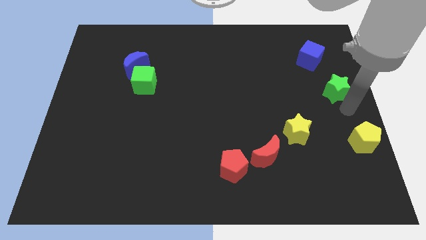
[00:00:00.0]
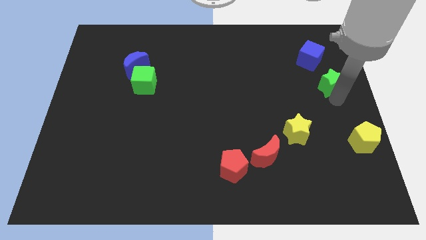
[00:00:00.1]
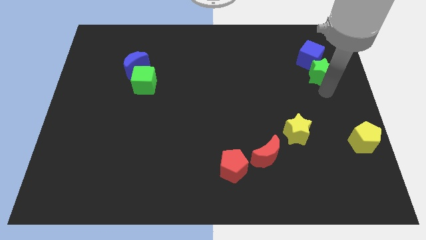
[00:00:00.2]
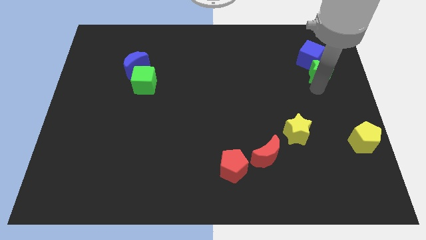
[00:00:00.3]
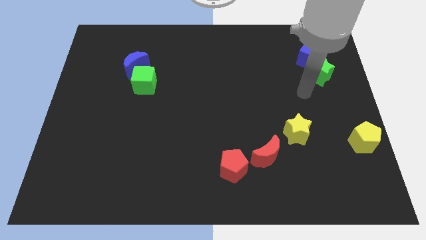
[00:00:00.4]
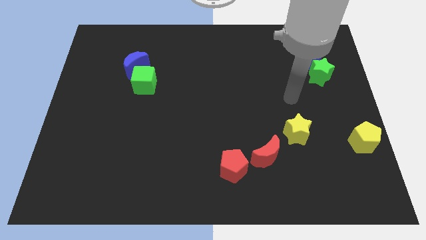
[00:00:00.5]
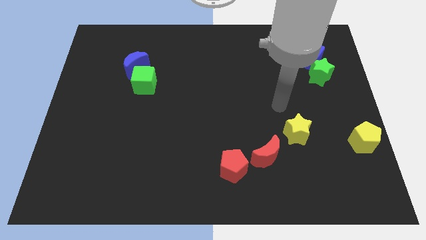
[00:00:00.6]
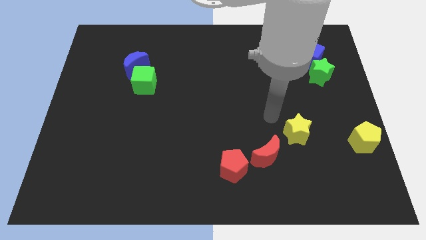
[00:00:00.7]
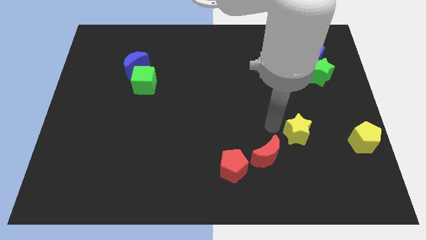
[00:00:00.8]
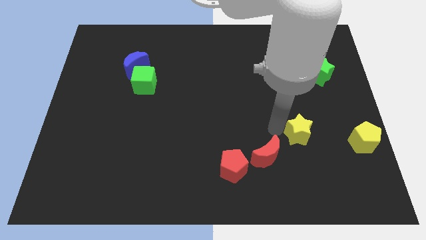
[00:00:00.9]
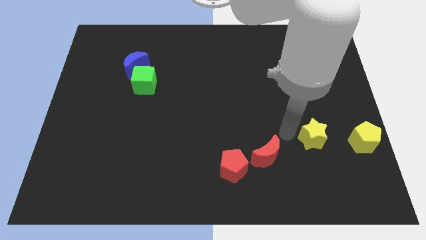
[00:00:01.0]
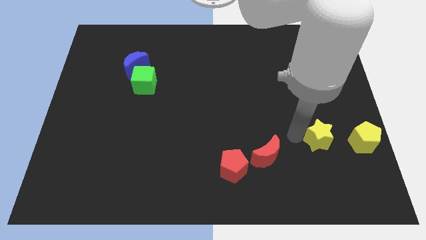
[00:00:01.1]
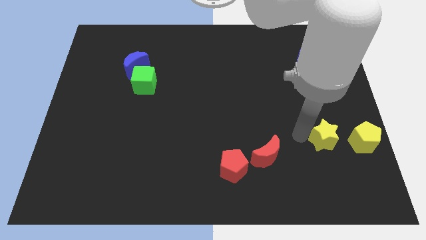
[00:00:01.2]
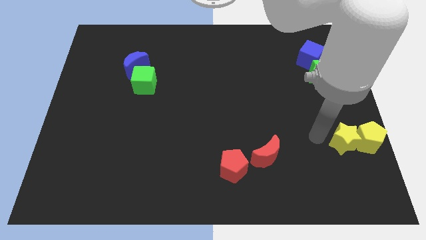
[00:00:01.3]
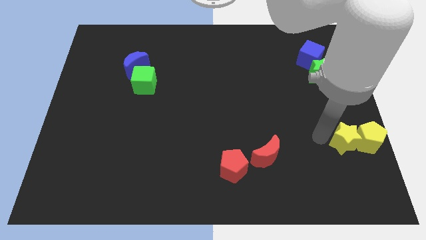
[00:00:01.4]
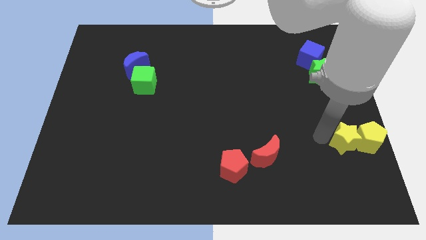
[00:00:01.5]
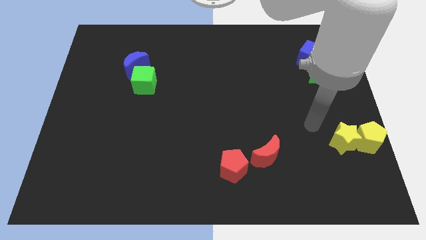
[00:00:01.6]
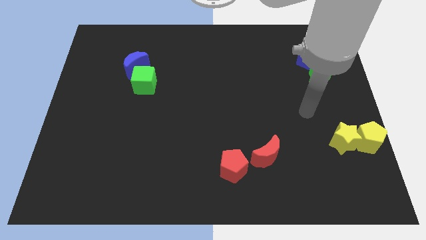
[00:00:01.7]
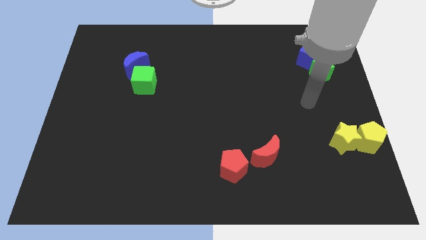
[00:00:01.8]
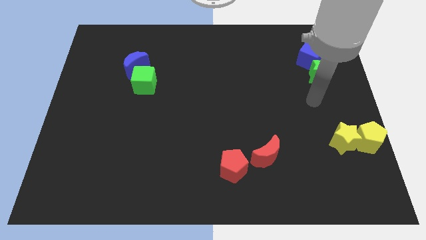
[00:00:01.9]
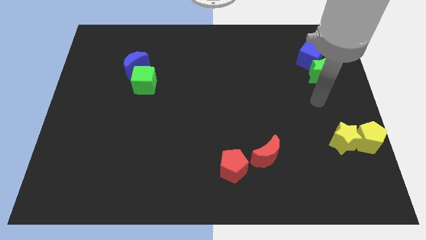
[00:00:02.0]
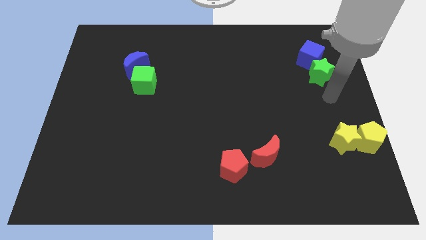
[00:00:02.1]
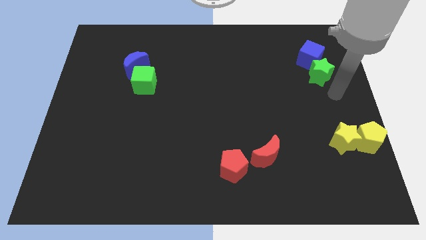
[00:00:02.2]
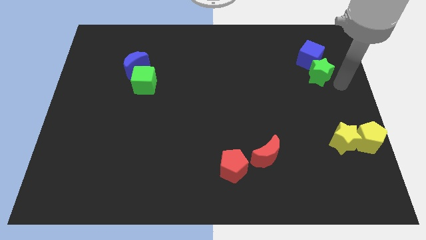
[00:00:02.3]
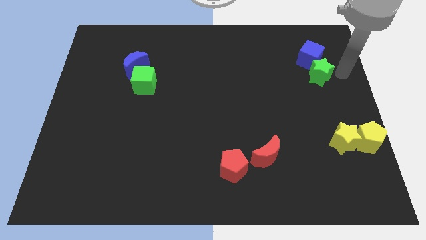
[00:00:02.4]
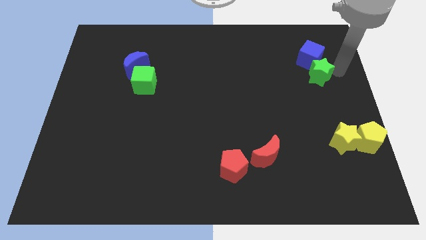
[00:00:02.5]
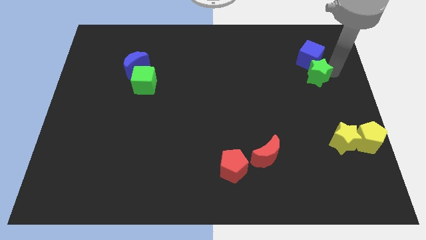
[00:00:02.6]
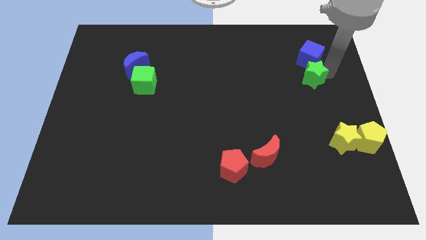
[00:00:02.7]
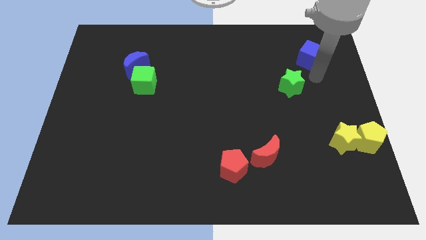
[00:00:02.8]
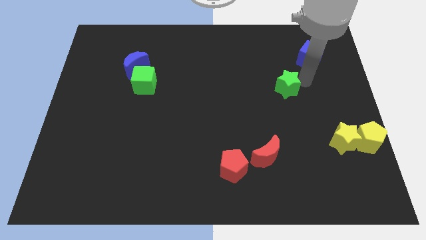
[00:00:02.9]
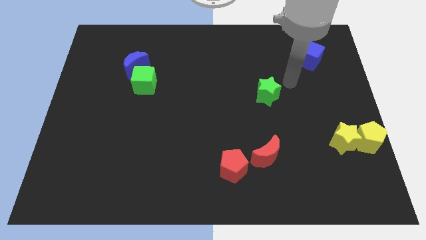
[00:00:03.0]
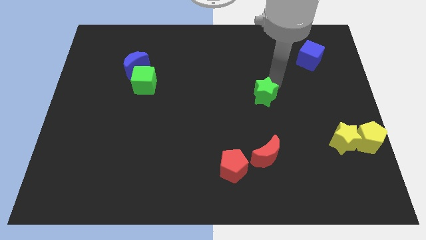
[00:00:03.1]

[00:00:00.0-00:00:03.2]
place the yellow star to the left side of the yellow pentagon

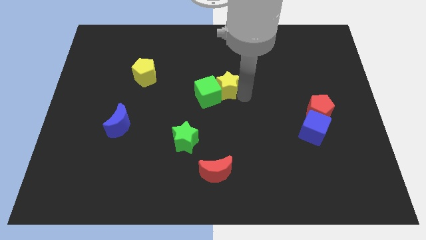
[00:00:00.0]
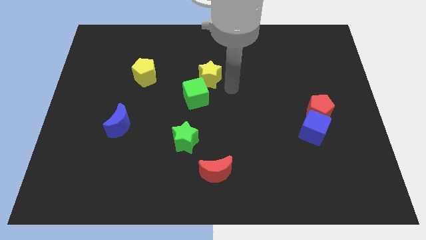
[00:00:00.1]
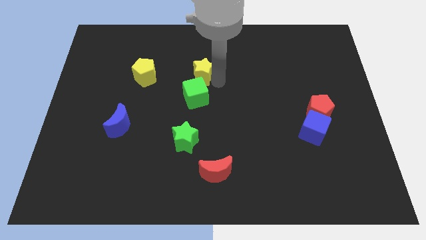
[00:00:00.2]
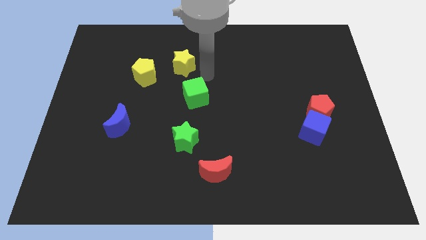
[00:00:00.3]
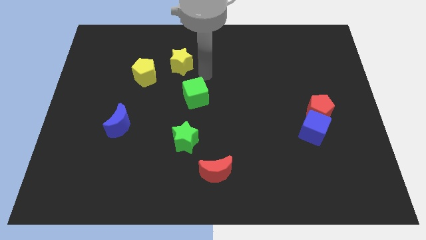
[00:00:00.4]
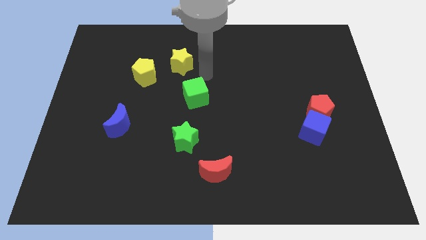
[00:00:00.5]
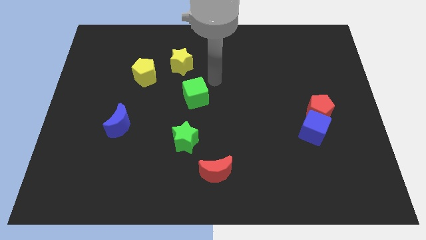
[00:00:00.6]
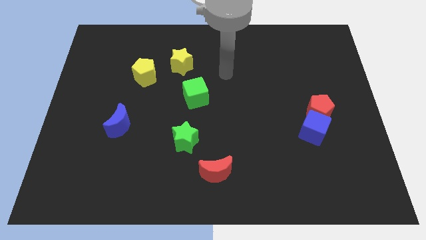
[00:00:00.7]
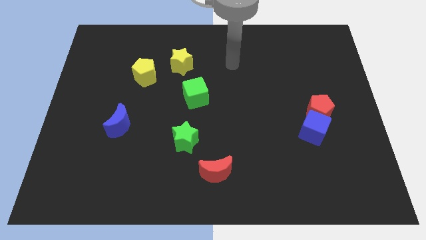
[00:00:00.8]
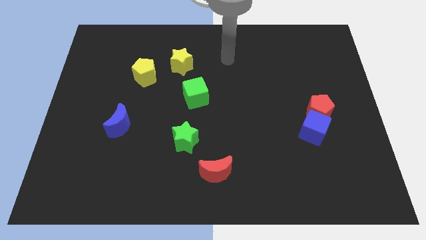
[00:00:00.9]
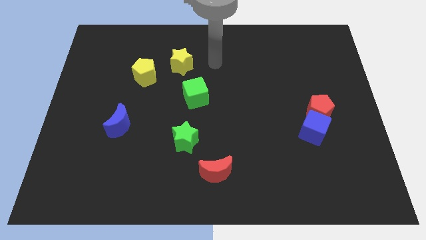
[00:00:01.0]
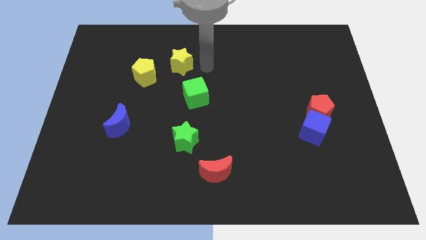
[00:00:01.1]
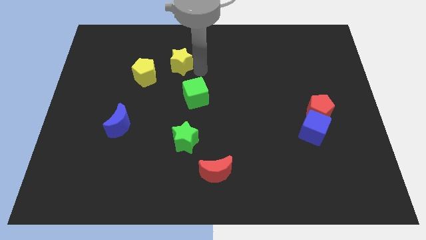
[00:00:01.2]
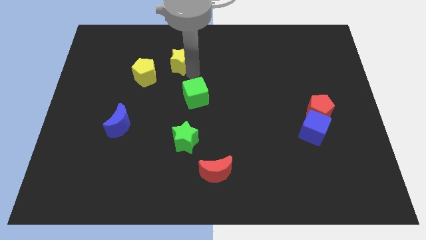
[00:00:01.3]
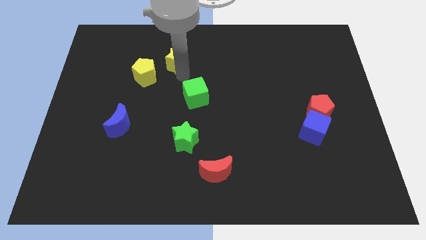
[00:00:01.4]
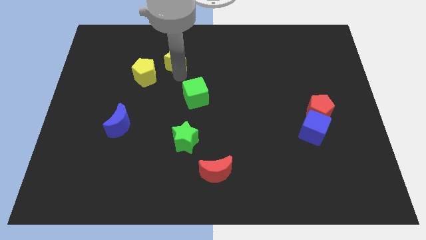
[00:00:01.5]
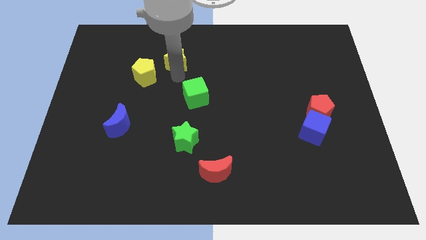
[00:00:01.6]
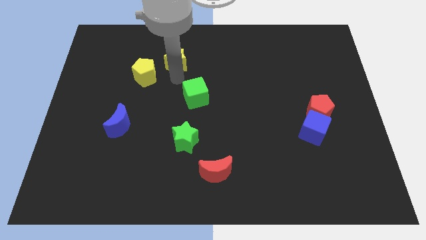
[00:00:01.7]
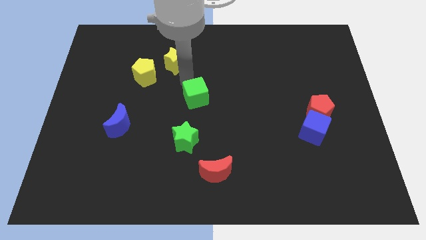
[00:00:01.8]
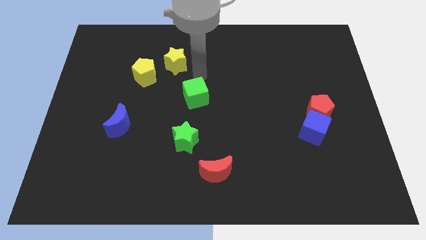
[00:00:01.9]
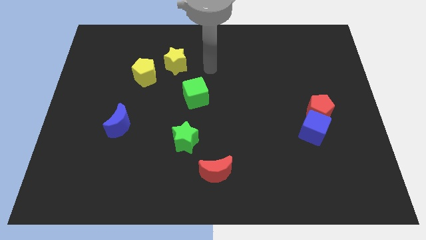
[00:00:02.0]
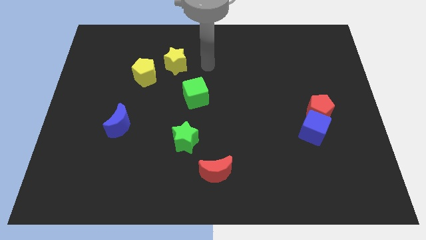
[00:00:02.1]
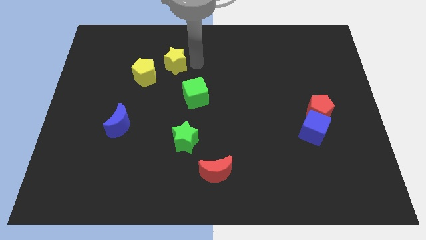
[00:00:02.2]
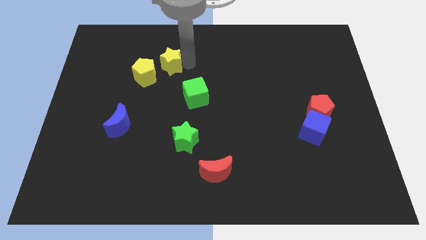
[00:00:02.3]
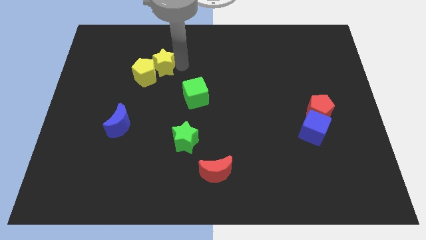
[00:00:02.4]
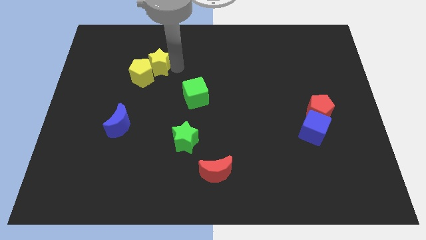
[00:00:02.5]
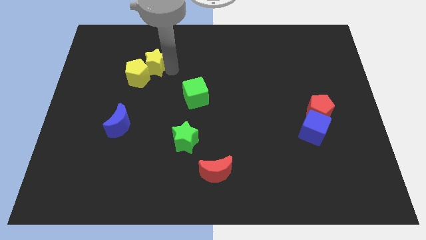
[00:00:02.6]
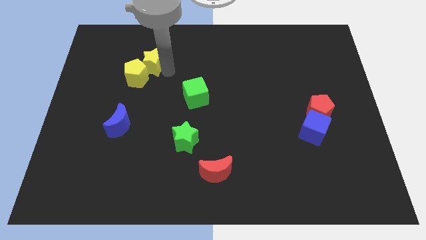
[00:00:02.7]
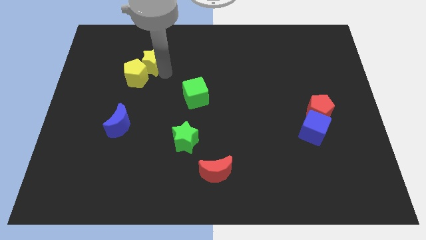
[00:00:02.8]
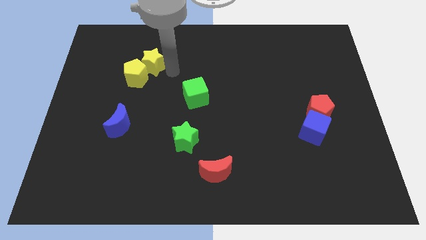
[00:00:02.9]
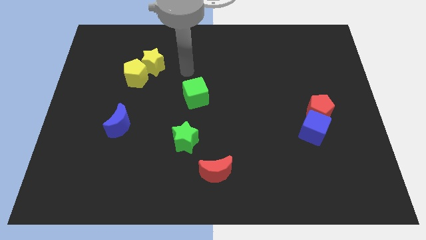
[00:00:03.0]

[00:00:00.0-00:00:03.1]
place the yellow star into yellow pentagon diagonally

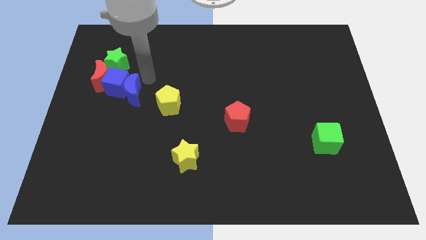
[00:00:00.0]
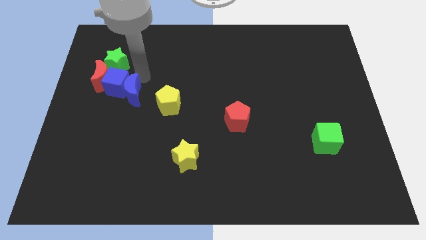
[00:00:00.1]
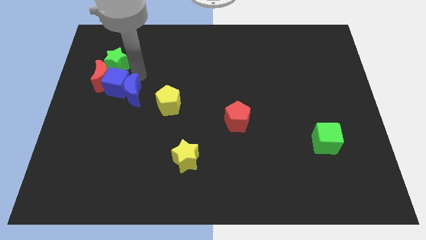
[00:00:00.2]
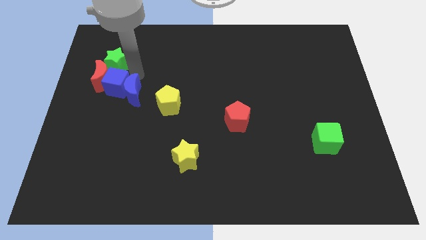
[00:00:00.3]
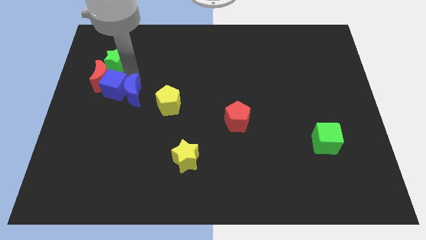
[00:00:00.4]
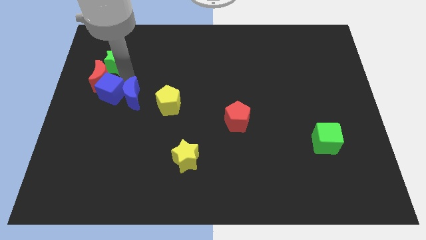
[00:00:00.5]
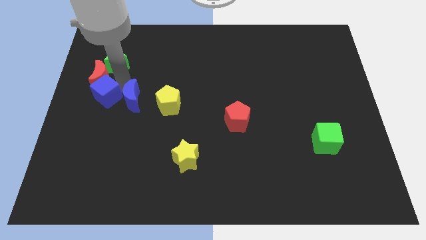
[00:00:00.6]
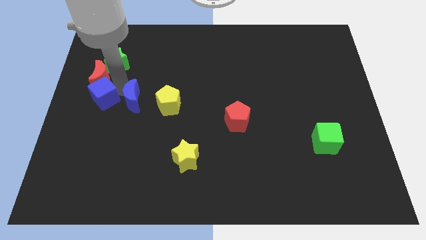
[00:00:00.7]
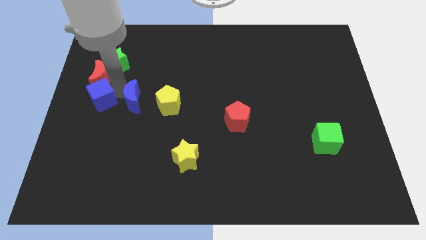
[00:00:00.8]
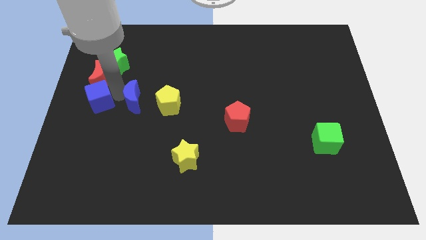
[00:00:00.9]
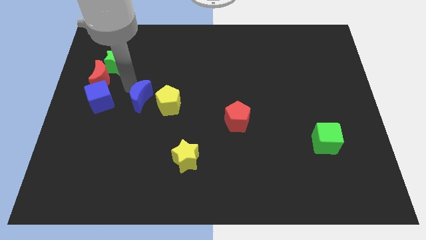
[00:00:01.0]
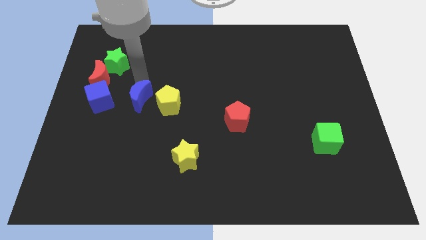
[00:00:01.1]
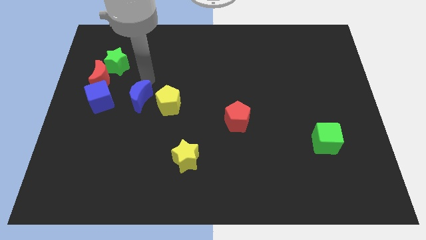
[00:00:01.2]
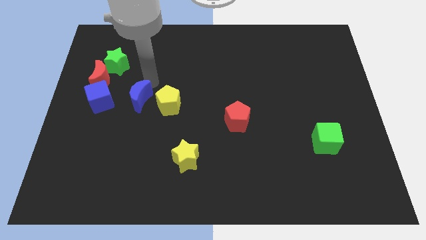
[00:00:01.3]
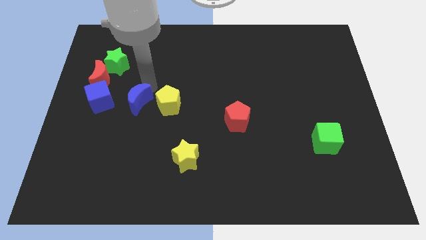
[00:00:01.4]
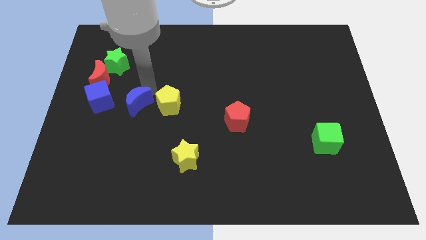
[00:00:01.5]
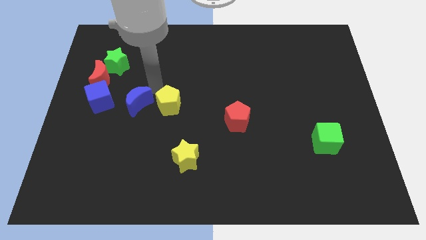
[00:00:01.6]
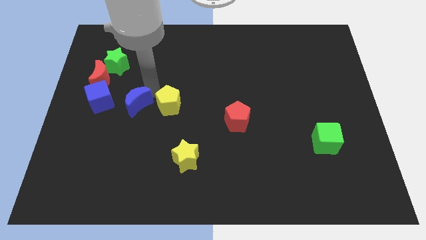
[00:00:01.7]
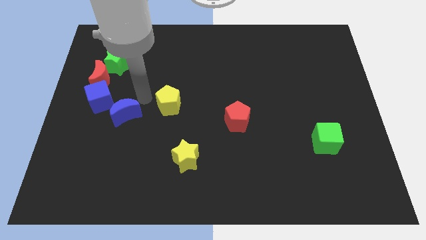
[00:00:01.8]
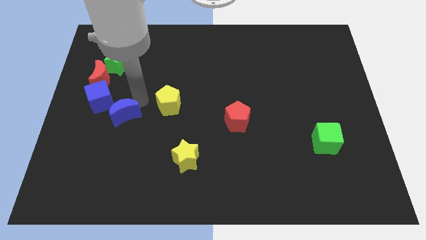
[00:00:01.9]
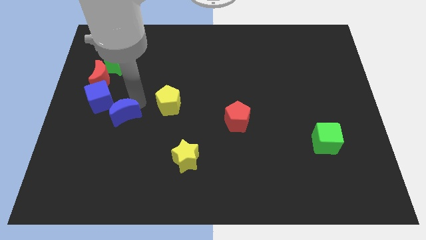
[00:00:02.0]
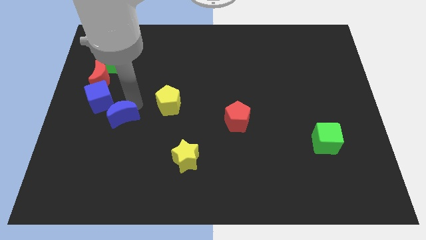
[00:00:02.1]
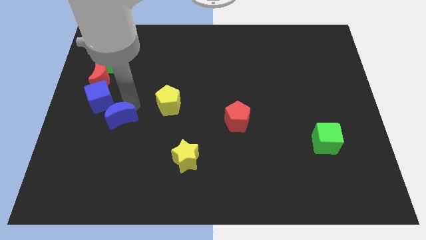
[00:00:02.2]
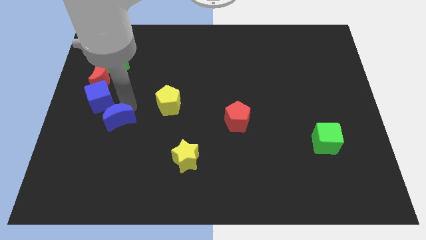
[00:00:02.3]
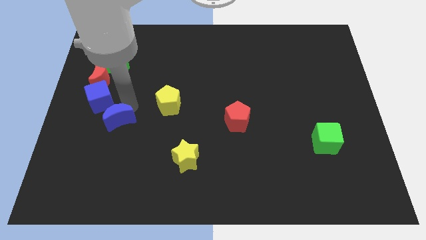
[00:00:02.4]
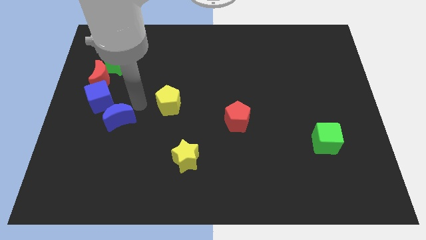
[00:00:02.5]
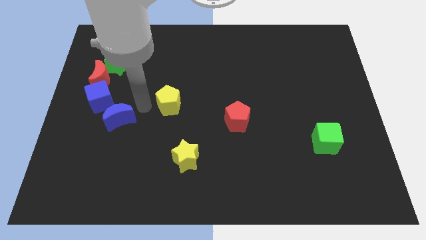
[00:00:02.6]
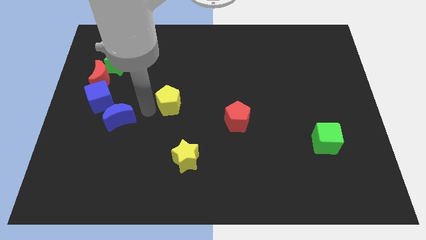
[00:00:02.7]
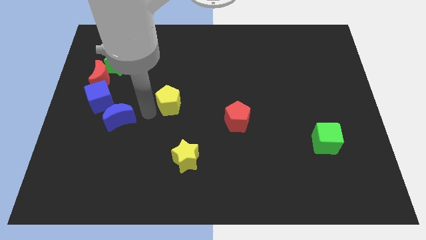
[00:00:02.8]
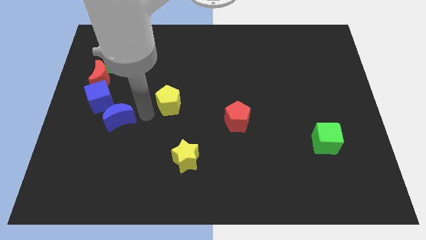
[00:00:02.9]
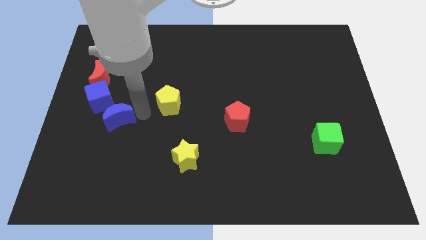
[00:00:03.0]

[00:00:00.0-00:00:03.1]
move the group of blue blocks towards the bottom side of the red moon
